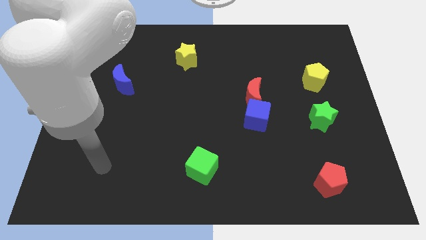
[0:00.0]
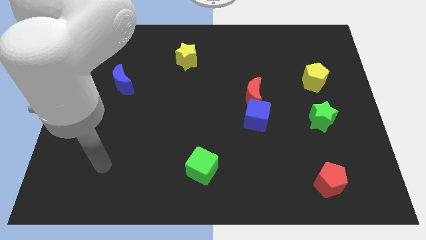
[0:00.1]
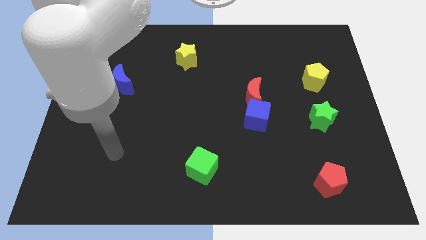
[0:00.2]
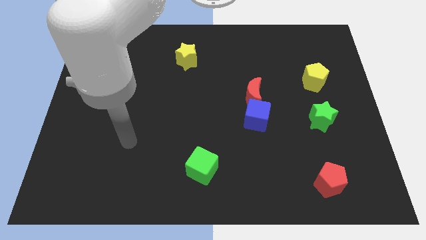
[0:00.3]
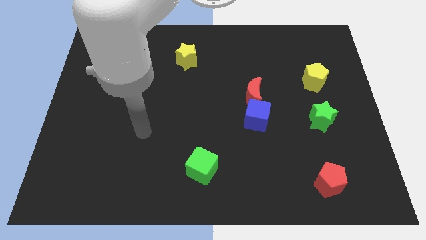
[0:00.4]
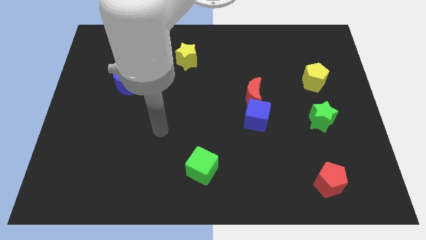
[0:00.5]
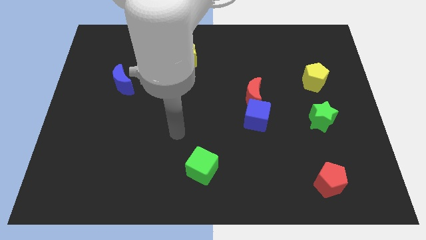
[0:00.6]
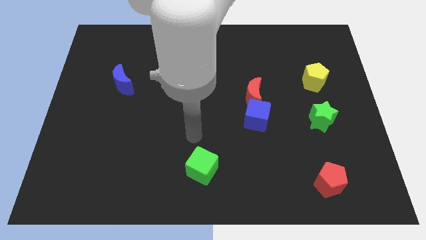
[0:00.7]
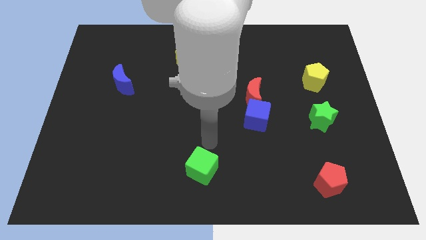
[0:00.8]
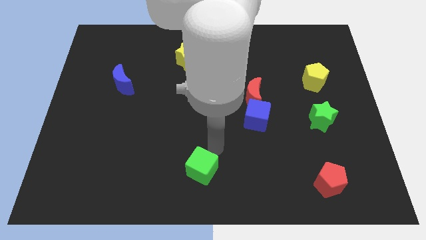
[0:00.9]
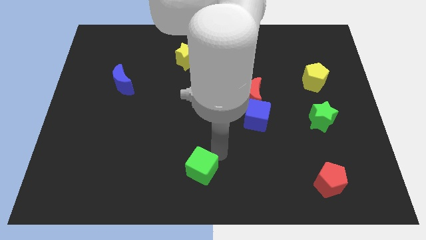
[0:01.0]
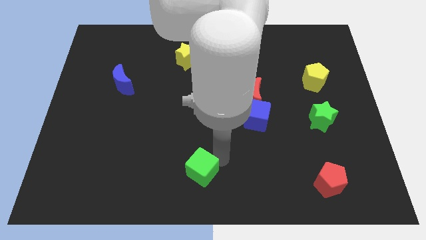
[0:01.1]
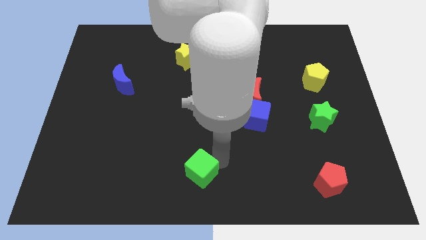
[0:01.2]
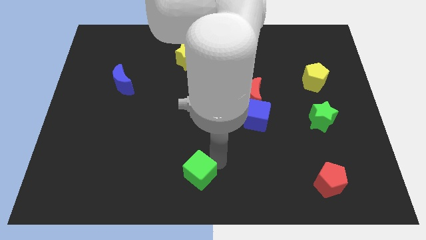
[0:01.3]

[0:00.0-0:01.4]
slightly move the green cube to the bottom of the board

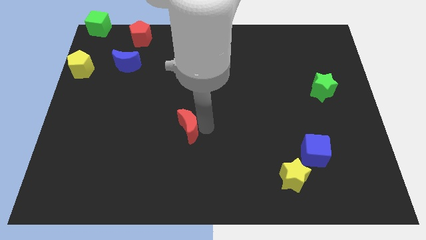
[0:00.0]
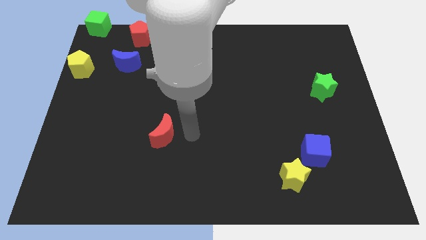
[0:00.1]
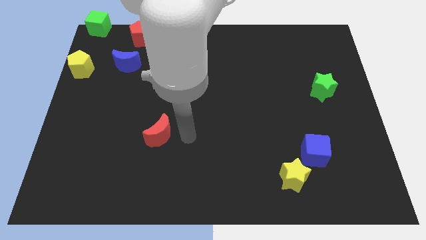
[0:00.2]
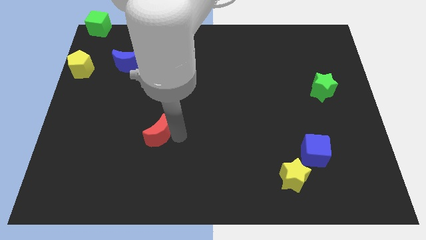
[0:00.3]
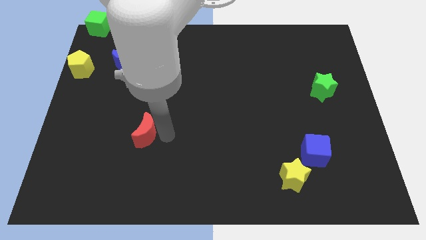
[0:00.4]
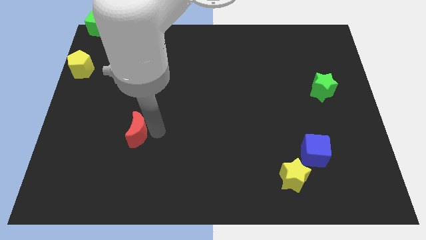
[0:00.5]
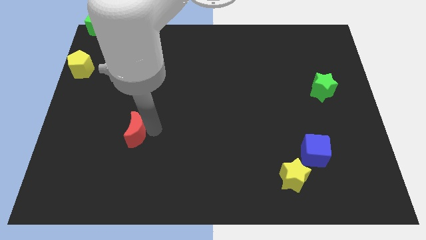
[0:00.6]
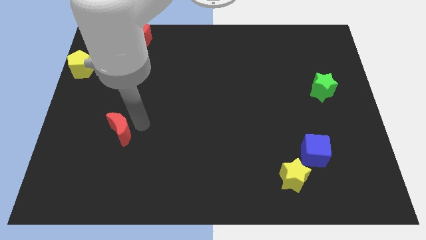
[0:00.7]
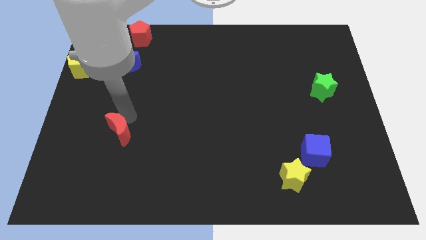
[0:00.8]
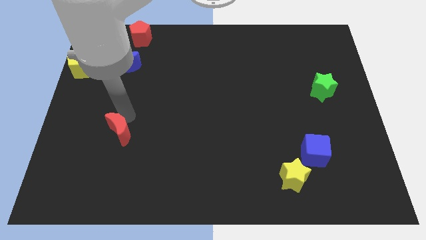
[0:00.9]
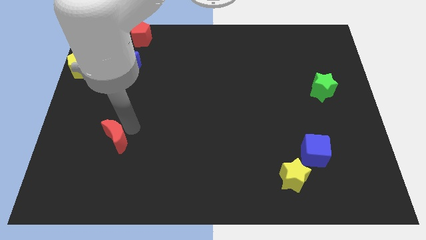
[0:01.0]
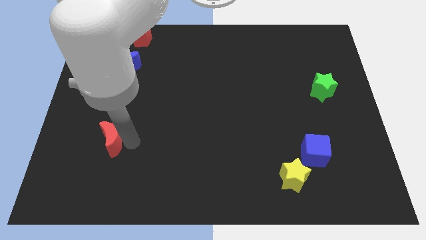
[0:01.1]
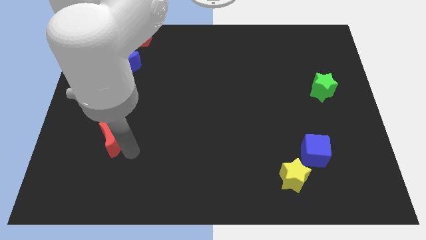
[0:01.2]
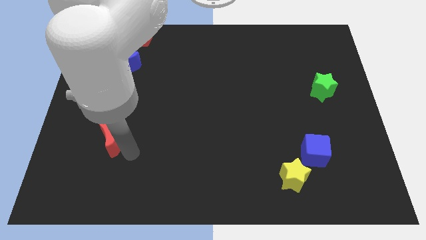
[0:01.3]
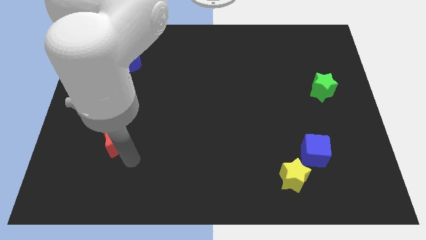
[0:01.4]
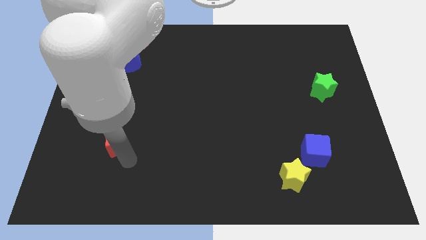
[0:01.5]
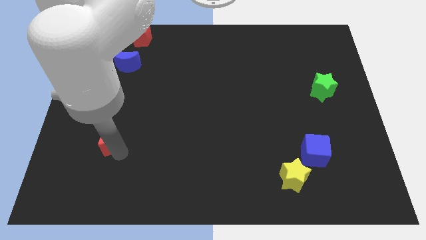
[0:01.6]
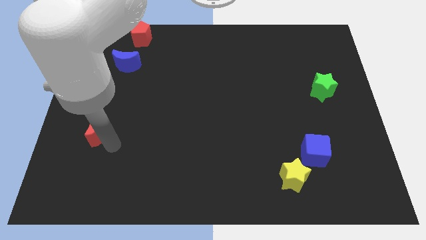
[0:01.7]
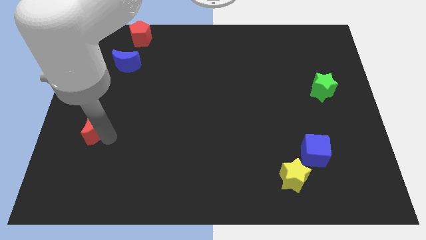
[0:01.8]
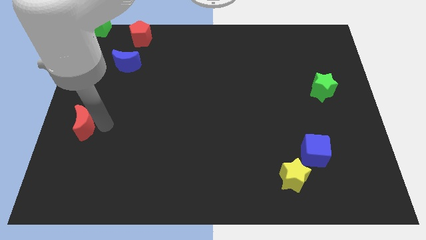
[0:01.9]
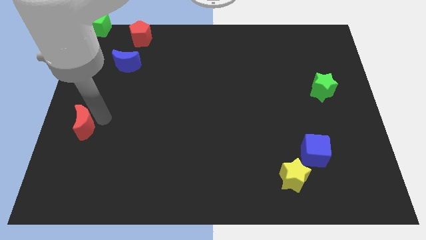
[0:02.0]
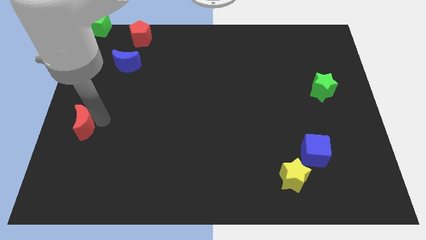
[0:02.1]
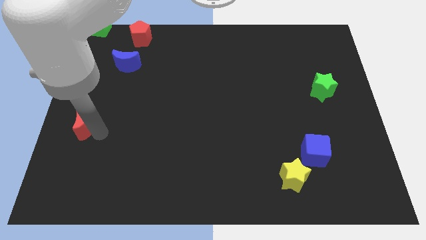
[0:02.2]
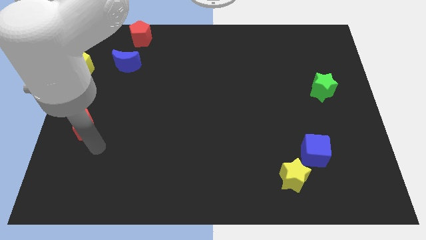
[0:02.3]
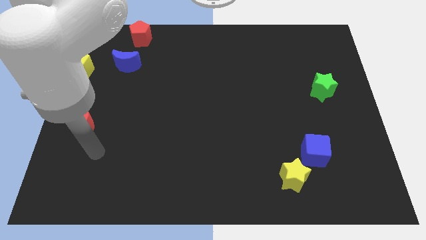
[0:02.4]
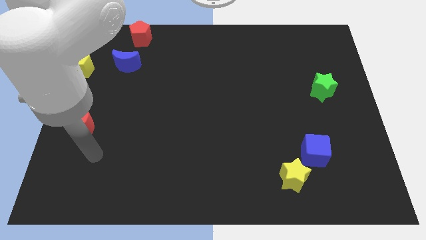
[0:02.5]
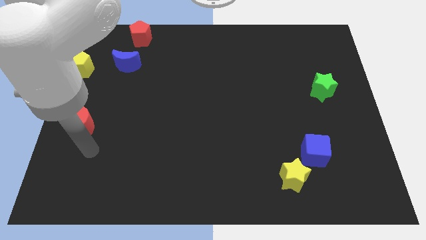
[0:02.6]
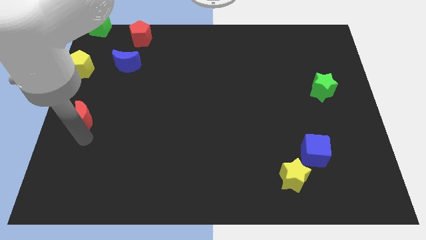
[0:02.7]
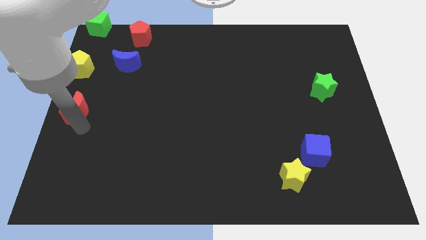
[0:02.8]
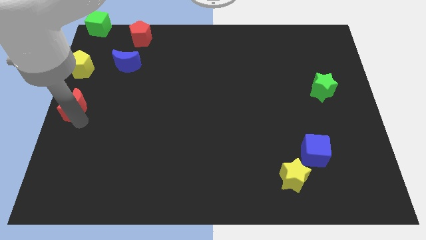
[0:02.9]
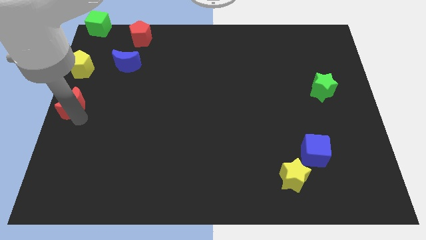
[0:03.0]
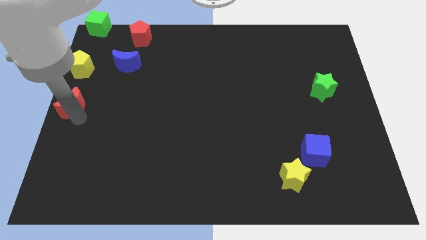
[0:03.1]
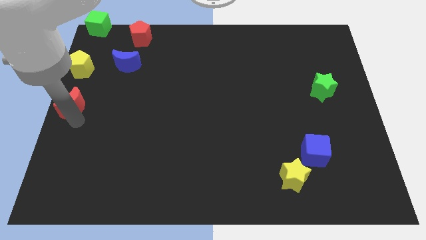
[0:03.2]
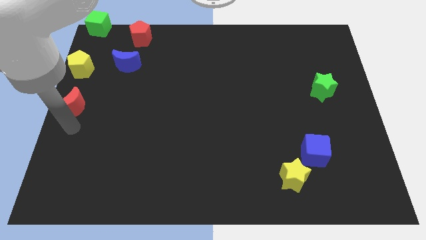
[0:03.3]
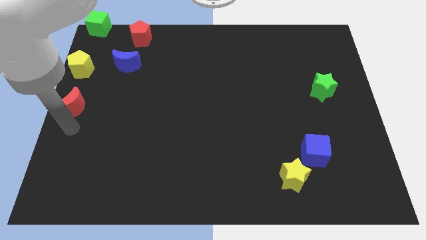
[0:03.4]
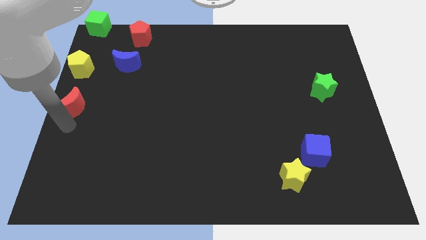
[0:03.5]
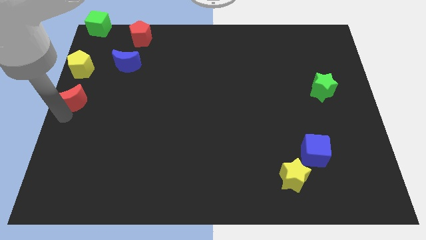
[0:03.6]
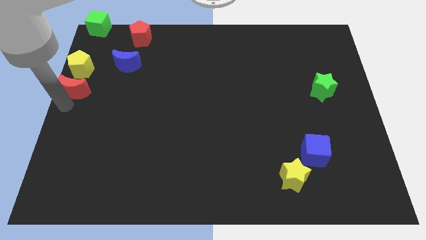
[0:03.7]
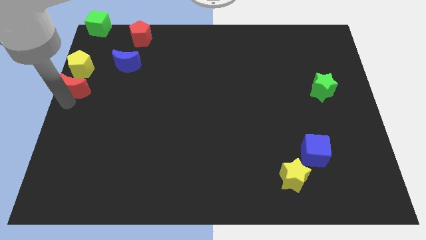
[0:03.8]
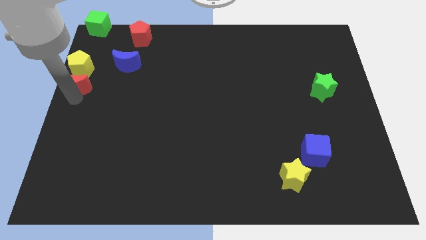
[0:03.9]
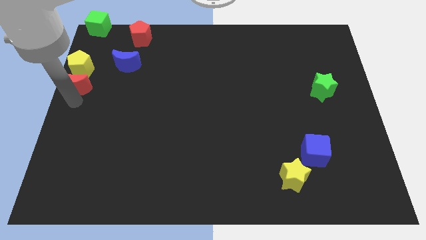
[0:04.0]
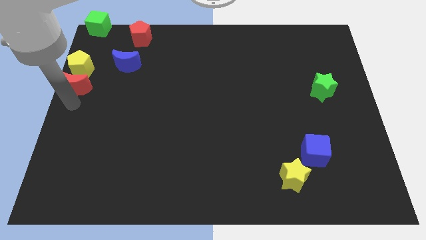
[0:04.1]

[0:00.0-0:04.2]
move the red moon to the bottom side of the yellow pentagon

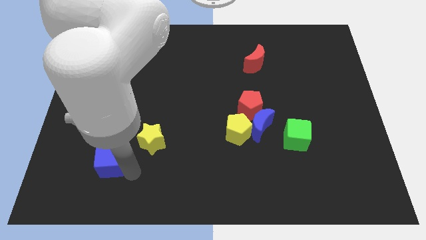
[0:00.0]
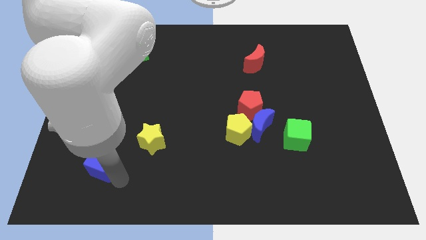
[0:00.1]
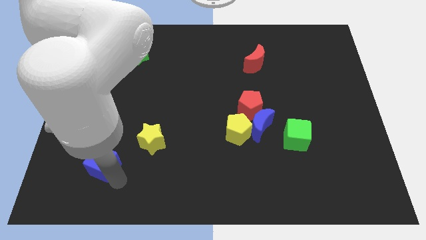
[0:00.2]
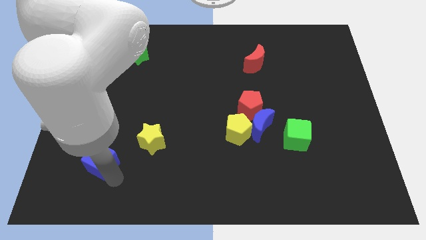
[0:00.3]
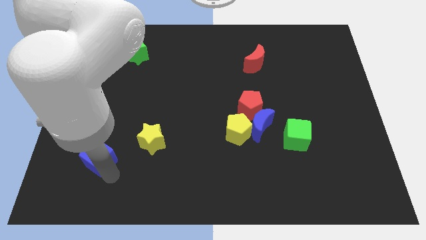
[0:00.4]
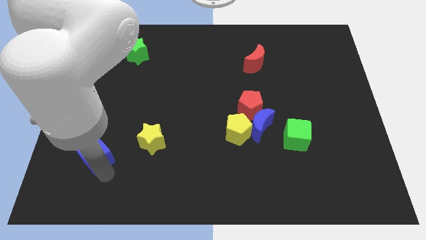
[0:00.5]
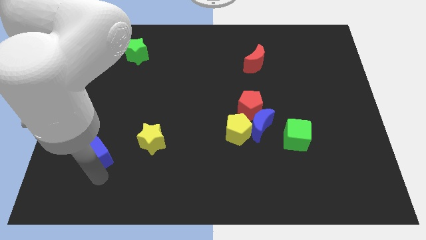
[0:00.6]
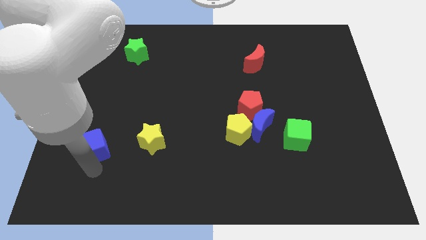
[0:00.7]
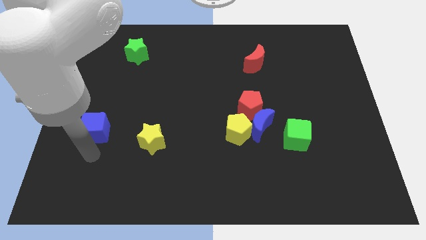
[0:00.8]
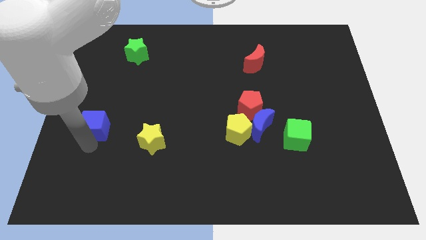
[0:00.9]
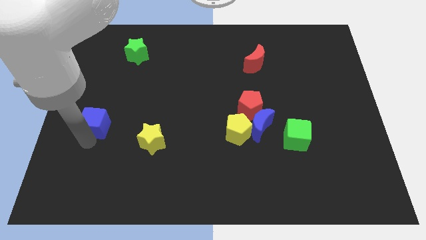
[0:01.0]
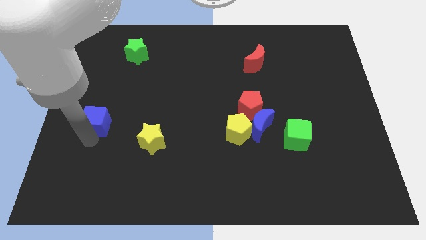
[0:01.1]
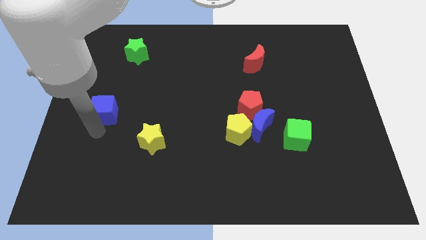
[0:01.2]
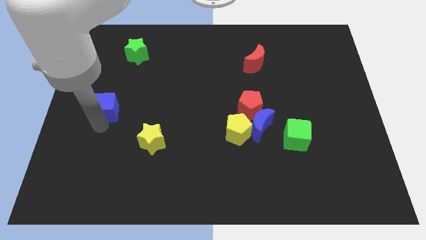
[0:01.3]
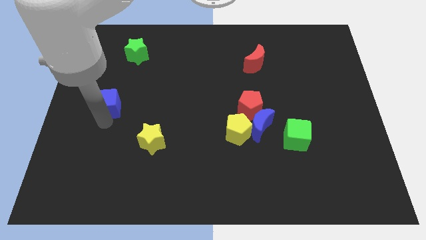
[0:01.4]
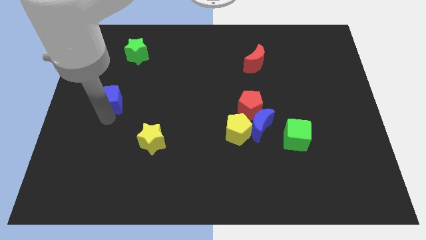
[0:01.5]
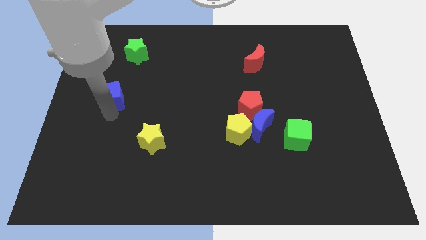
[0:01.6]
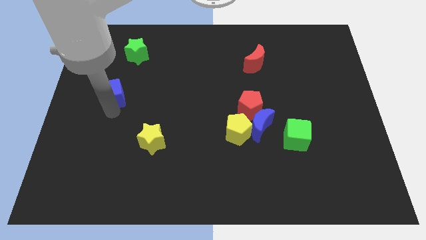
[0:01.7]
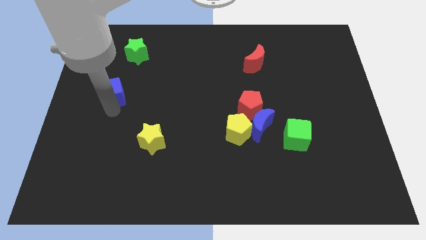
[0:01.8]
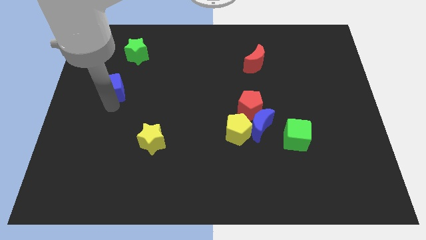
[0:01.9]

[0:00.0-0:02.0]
drag the blue cube towards the top

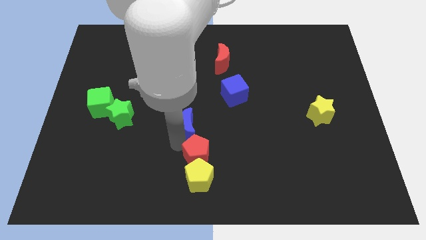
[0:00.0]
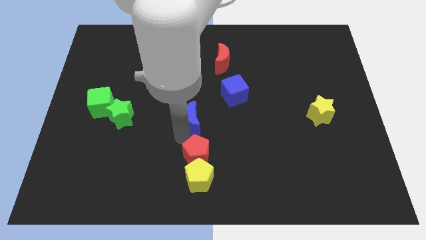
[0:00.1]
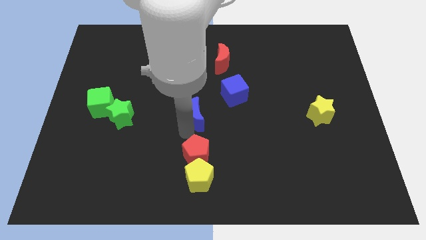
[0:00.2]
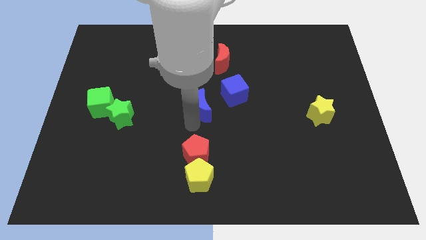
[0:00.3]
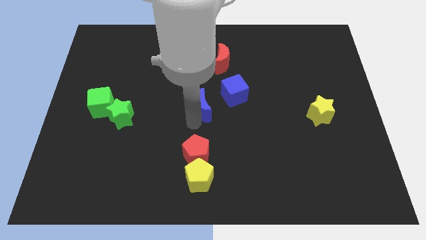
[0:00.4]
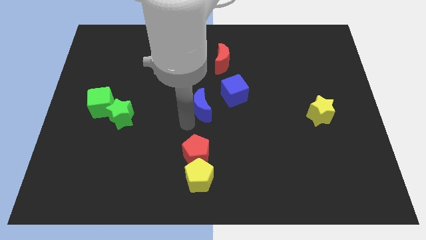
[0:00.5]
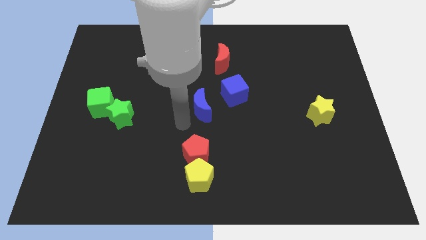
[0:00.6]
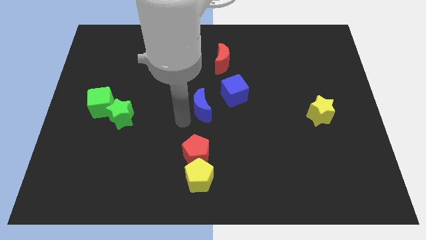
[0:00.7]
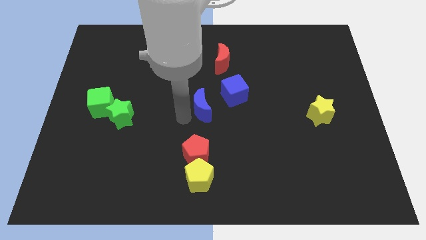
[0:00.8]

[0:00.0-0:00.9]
separate blue moon from red pentagon

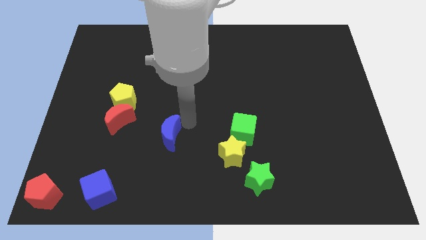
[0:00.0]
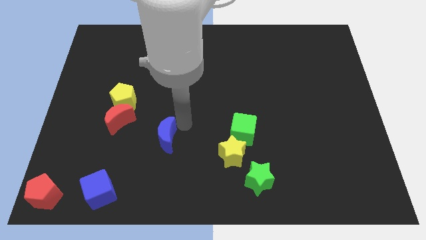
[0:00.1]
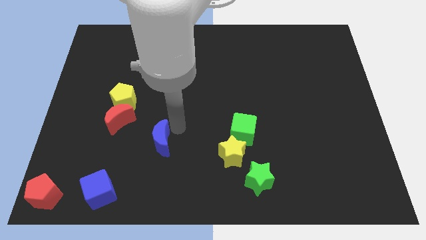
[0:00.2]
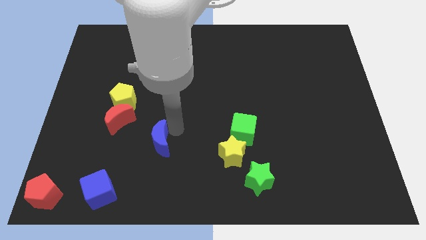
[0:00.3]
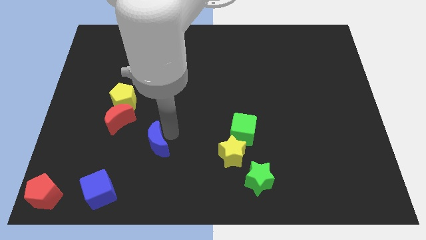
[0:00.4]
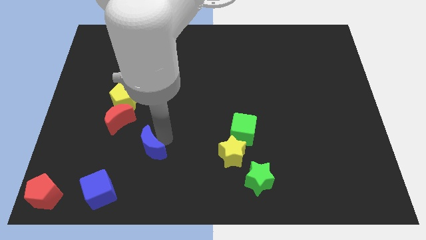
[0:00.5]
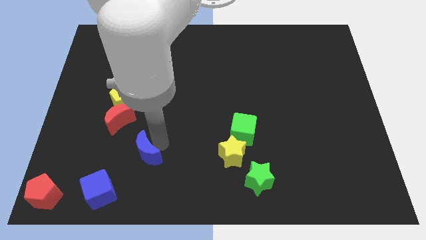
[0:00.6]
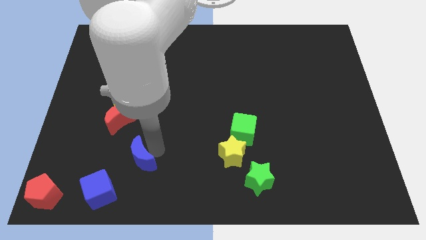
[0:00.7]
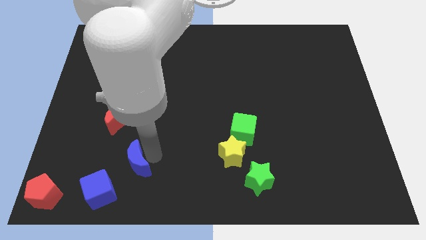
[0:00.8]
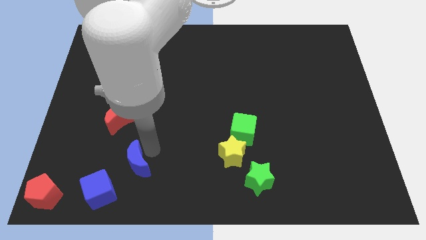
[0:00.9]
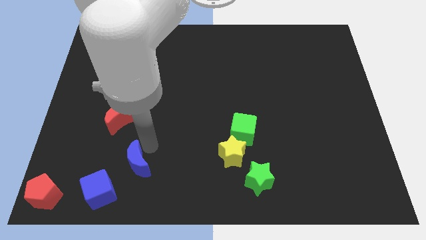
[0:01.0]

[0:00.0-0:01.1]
move the blue moon towards the blue cube
